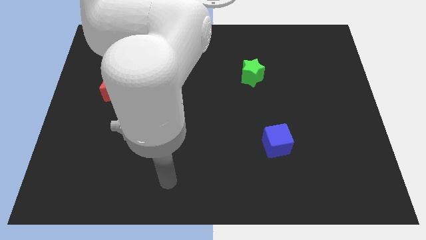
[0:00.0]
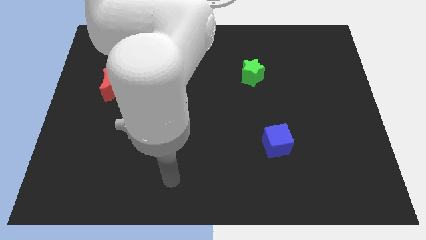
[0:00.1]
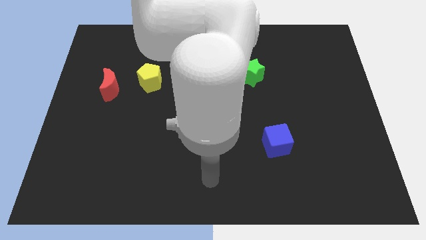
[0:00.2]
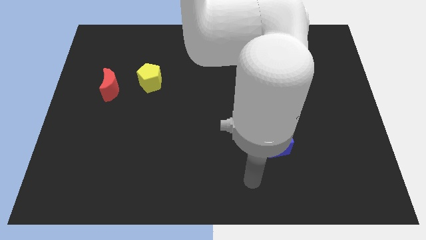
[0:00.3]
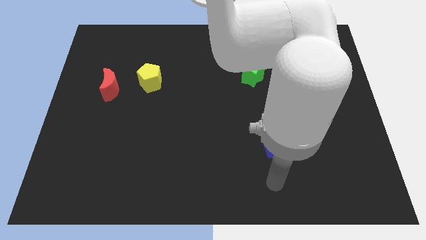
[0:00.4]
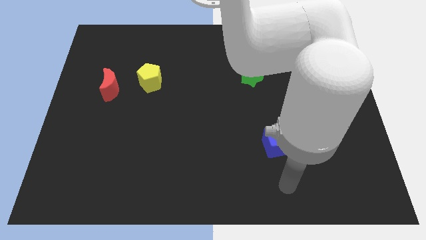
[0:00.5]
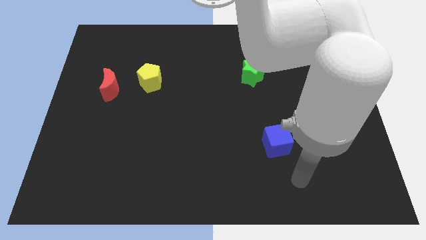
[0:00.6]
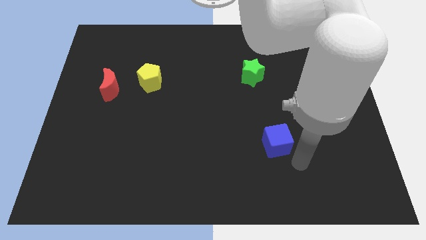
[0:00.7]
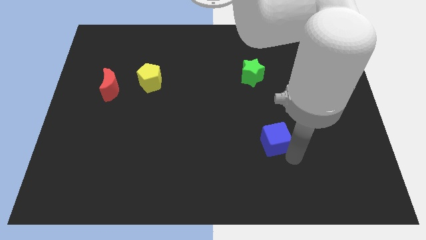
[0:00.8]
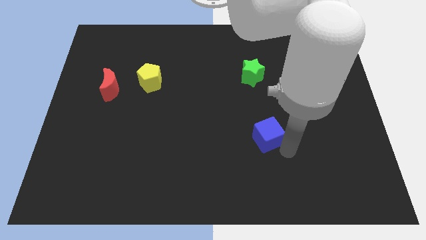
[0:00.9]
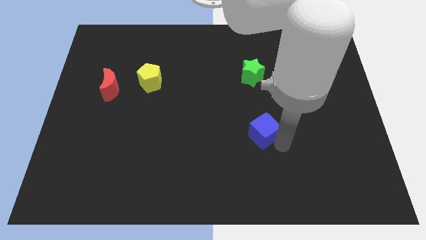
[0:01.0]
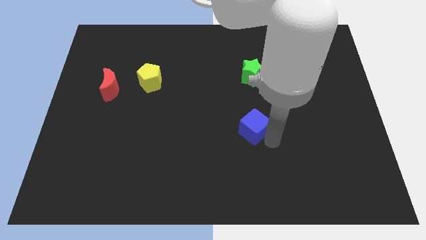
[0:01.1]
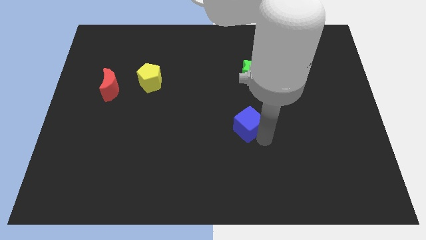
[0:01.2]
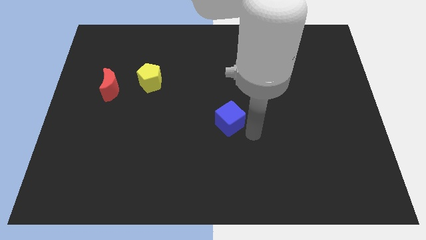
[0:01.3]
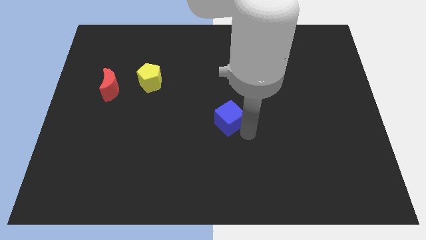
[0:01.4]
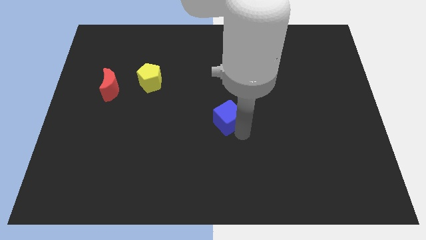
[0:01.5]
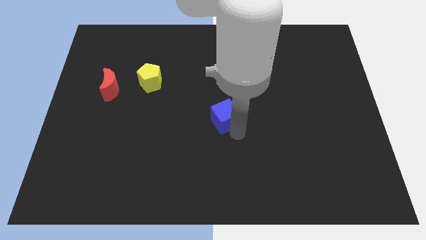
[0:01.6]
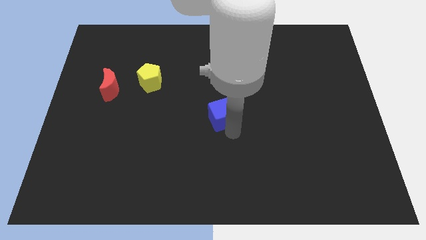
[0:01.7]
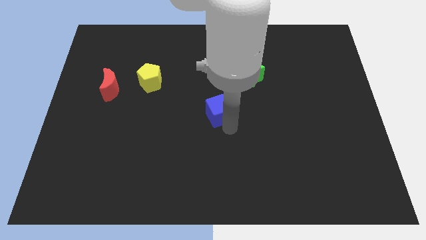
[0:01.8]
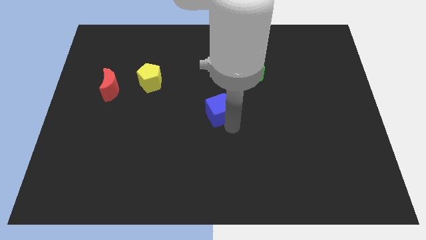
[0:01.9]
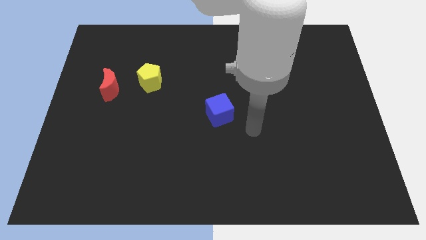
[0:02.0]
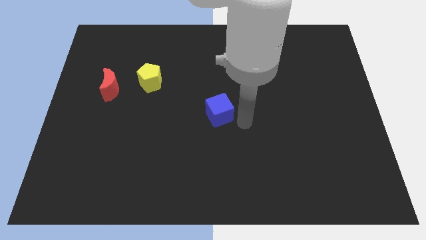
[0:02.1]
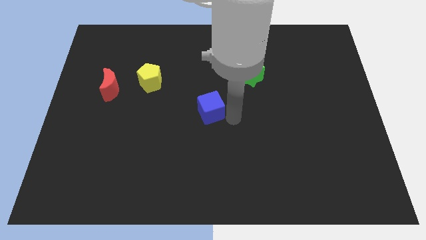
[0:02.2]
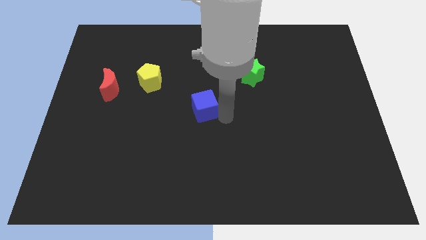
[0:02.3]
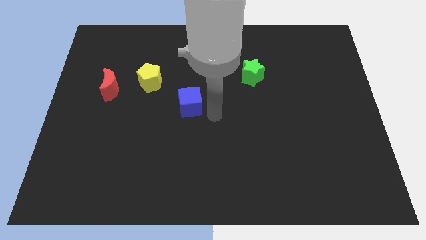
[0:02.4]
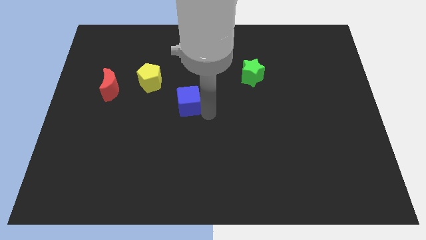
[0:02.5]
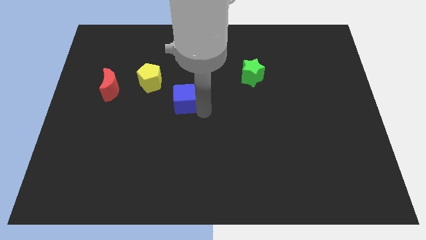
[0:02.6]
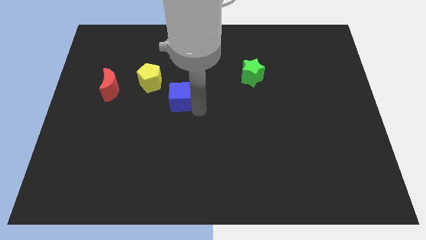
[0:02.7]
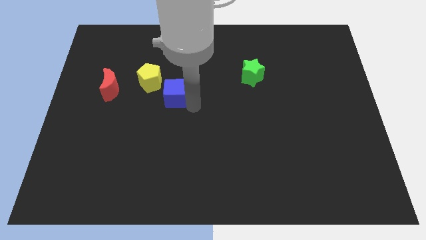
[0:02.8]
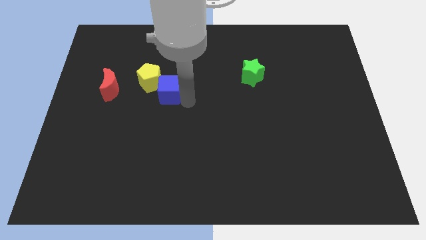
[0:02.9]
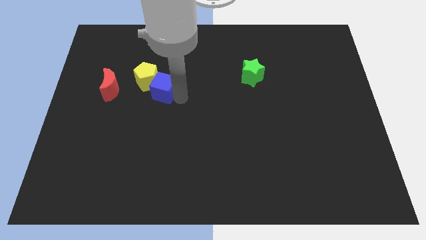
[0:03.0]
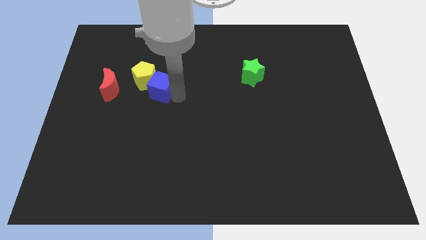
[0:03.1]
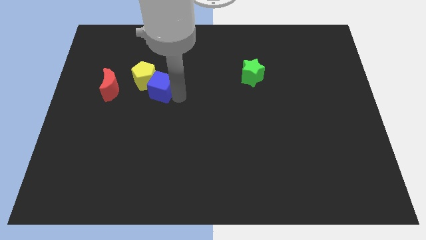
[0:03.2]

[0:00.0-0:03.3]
move the blue block close to the yellow block

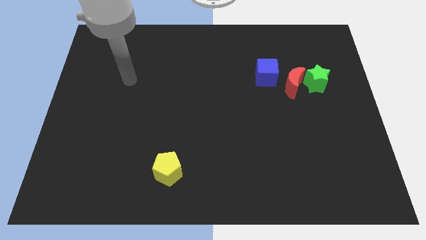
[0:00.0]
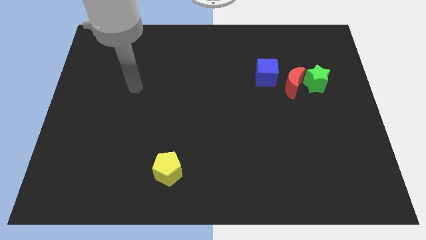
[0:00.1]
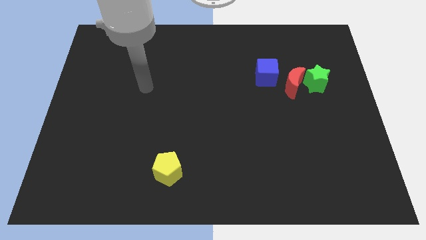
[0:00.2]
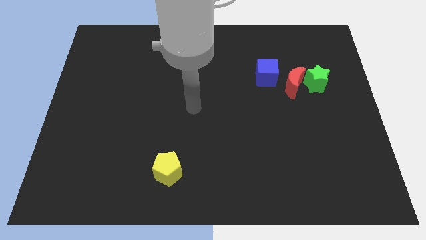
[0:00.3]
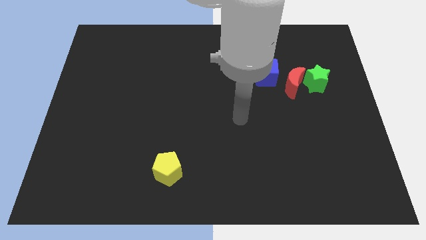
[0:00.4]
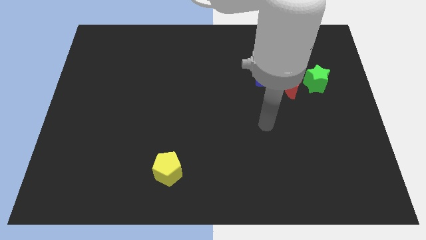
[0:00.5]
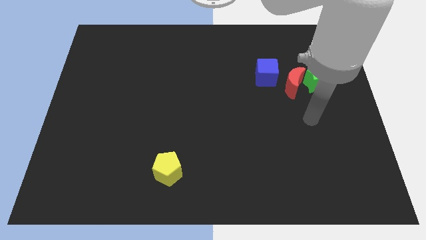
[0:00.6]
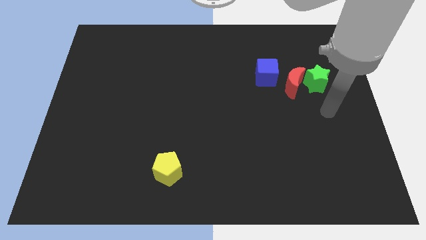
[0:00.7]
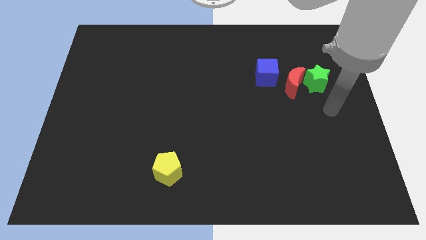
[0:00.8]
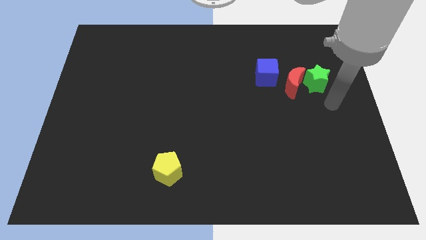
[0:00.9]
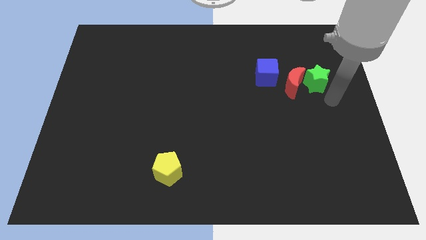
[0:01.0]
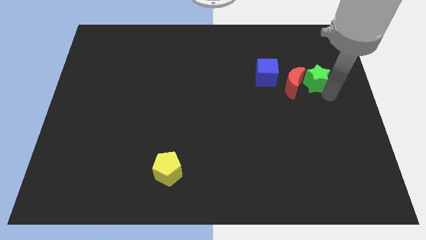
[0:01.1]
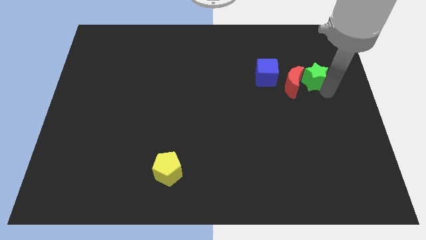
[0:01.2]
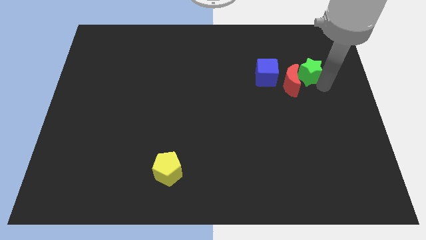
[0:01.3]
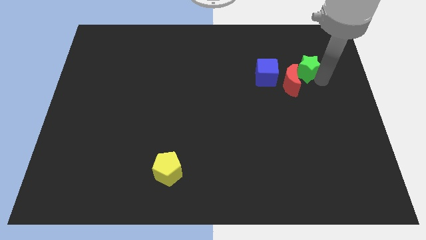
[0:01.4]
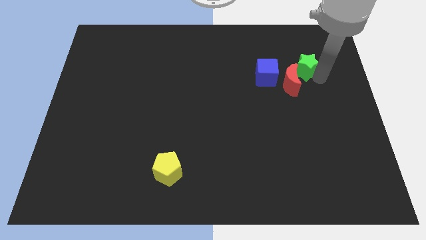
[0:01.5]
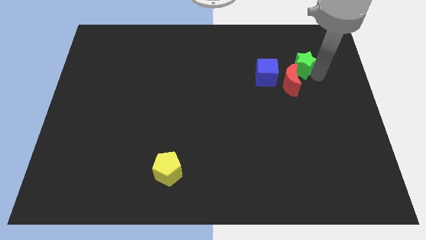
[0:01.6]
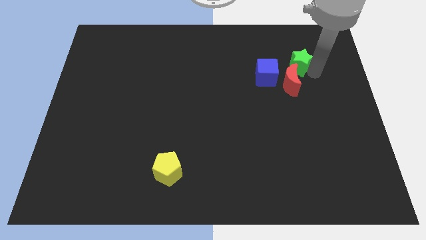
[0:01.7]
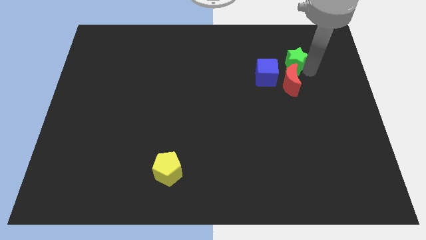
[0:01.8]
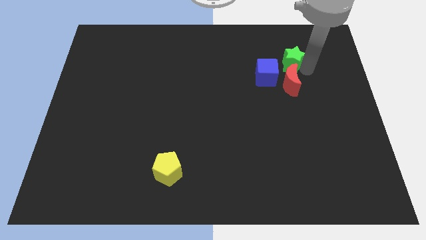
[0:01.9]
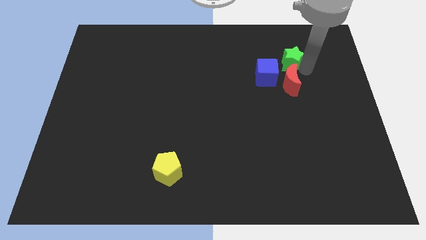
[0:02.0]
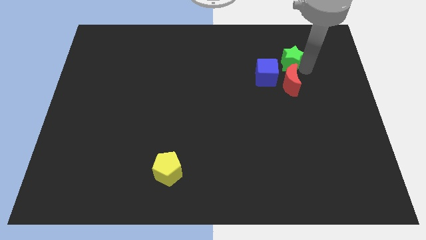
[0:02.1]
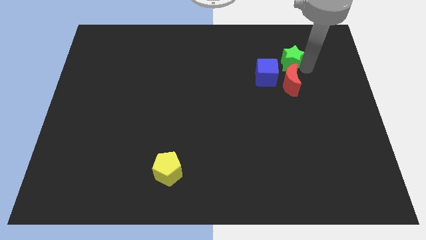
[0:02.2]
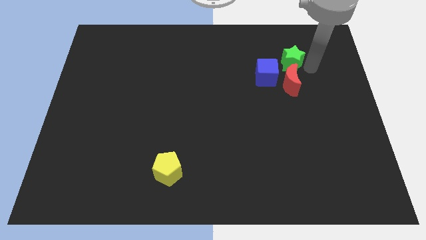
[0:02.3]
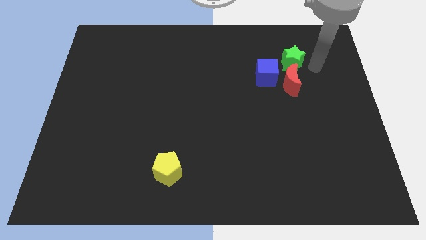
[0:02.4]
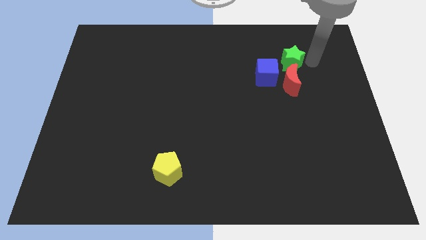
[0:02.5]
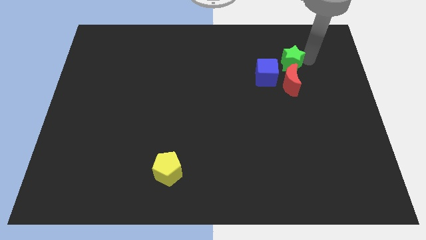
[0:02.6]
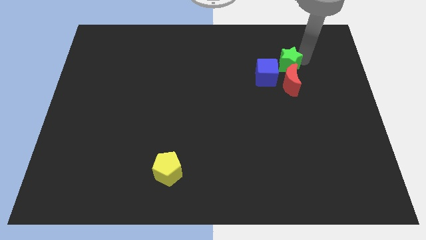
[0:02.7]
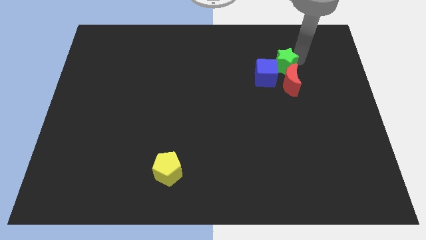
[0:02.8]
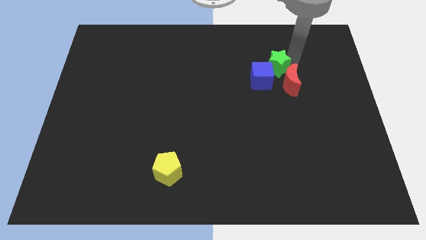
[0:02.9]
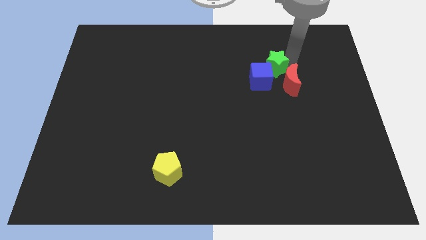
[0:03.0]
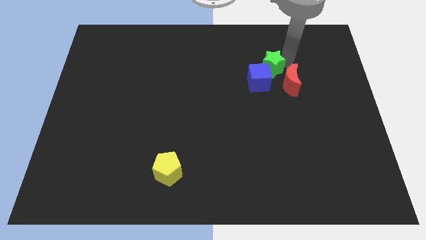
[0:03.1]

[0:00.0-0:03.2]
put the green block next to the blue block

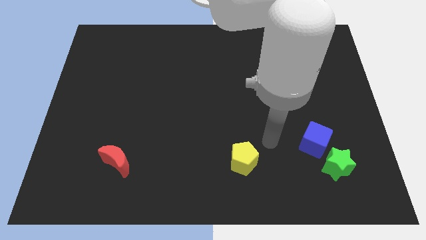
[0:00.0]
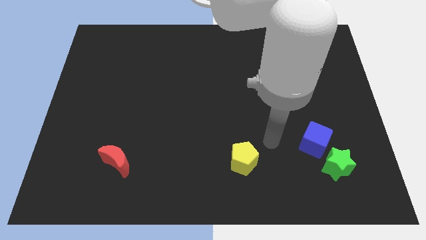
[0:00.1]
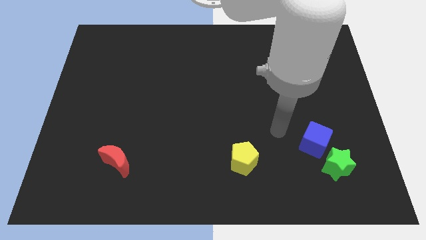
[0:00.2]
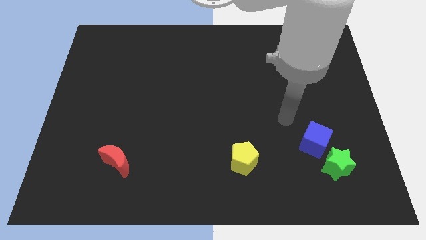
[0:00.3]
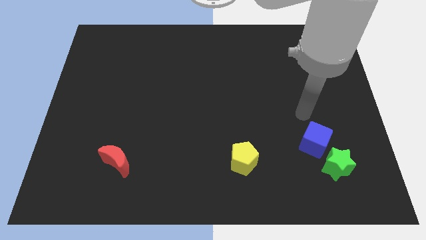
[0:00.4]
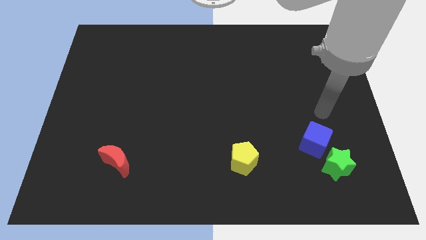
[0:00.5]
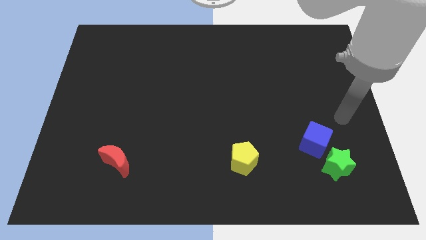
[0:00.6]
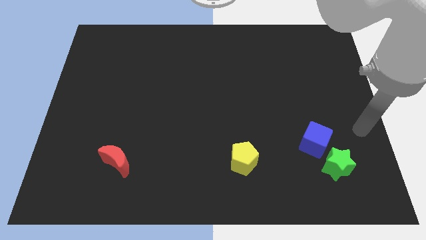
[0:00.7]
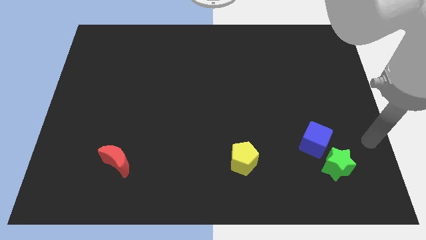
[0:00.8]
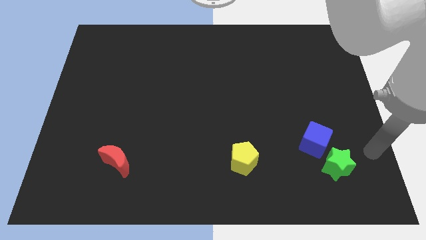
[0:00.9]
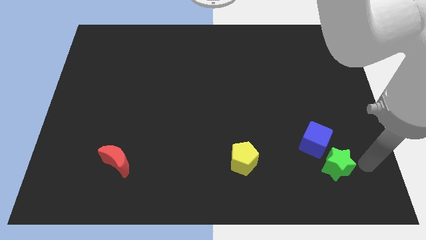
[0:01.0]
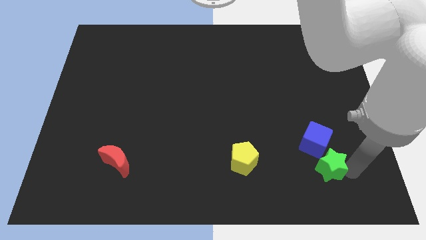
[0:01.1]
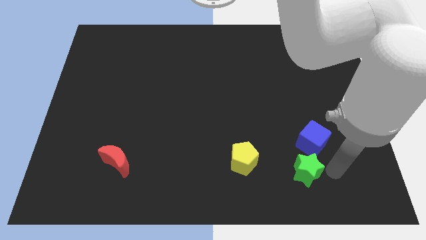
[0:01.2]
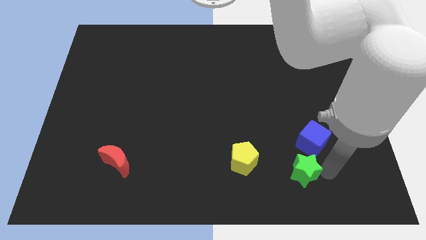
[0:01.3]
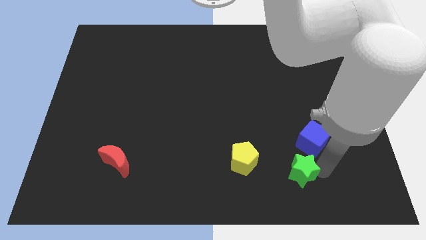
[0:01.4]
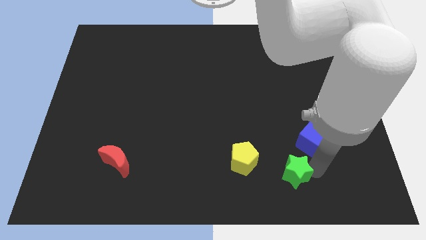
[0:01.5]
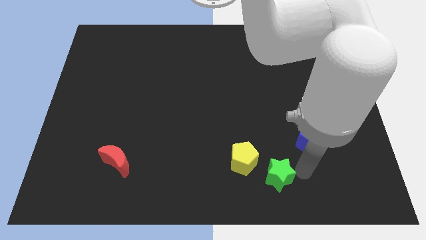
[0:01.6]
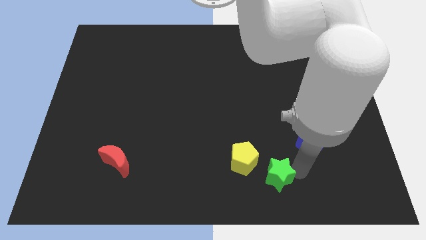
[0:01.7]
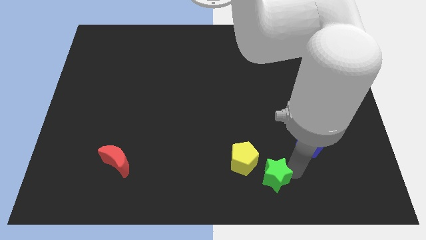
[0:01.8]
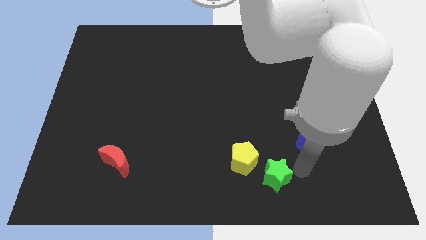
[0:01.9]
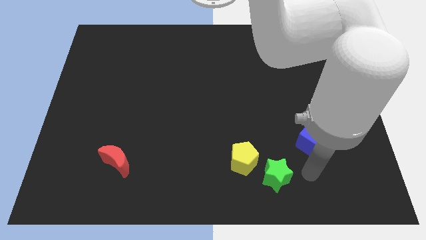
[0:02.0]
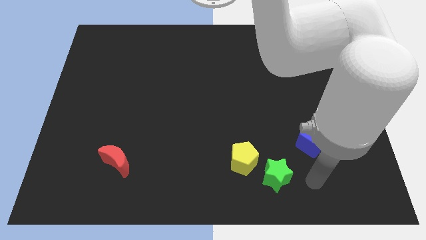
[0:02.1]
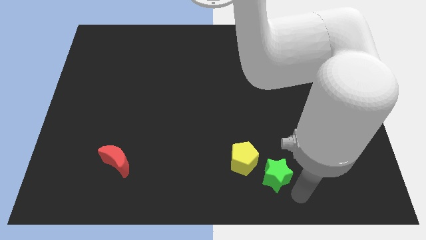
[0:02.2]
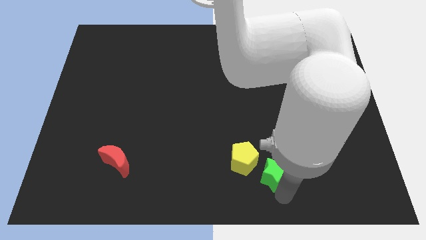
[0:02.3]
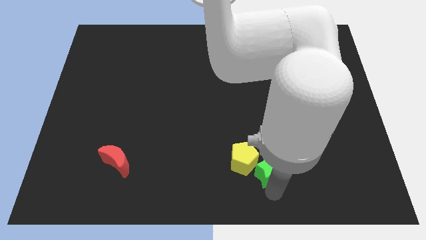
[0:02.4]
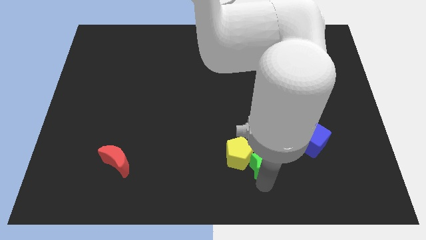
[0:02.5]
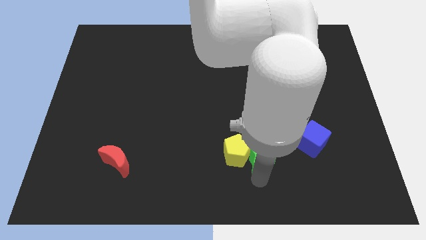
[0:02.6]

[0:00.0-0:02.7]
slide the green star towards the pentagon
